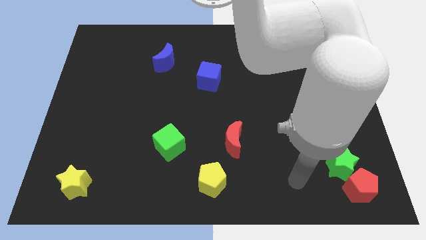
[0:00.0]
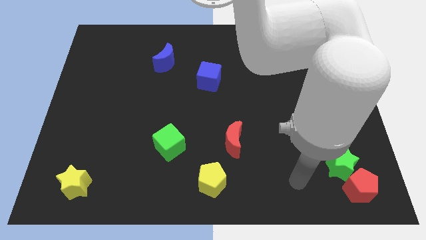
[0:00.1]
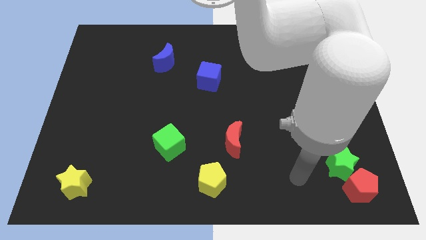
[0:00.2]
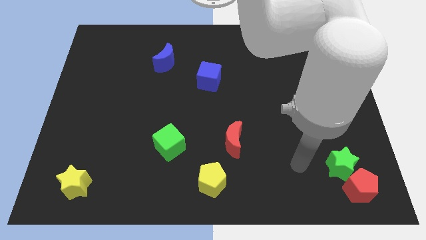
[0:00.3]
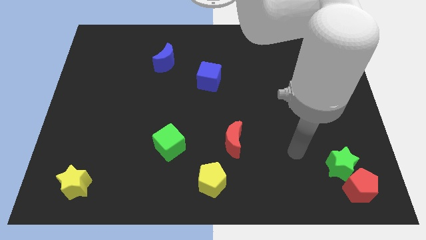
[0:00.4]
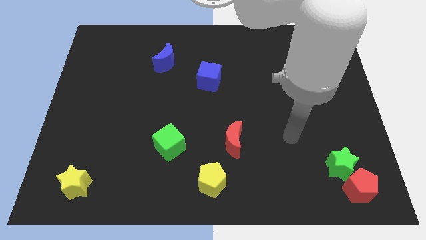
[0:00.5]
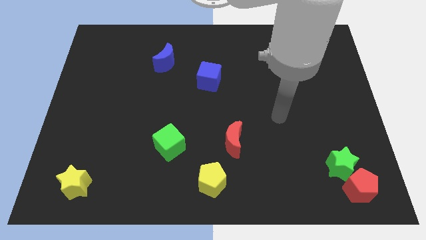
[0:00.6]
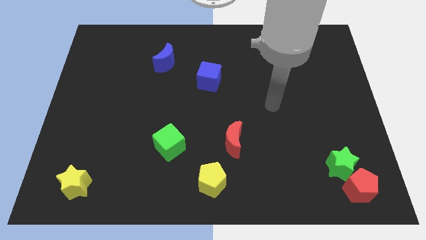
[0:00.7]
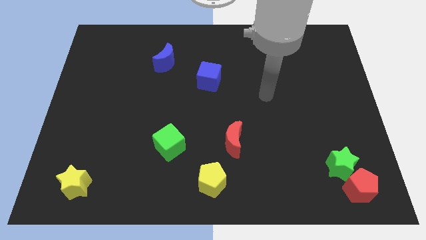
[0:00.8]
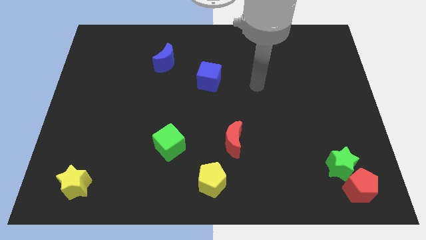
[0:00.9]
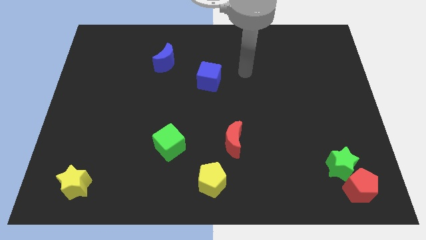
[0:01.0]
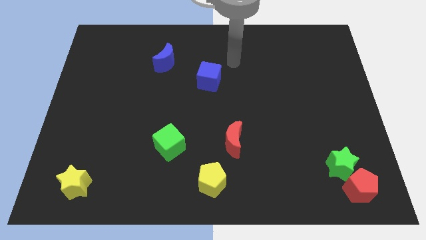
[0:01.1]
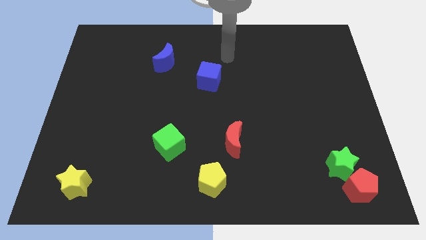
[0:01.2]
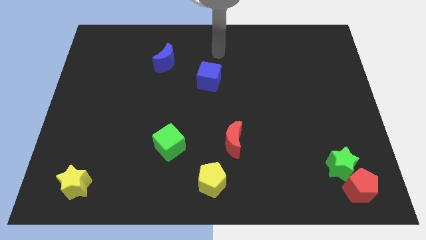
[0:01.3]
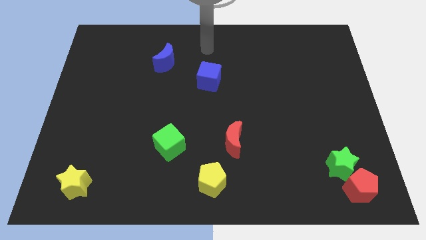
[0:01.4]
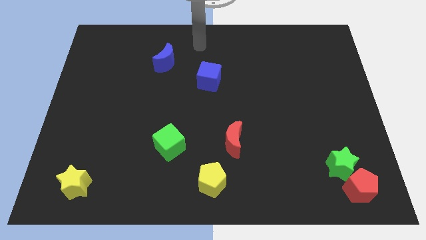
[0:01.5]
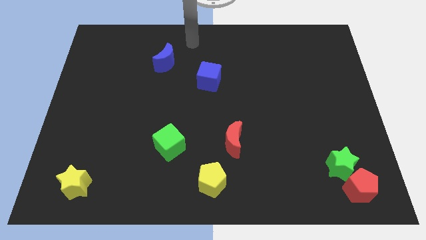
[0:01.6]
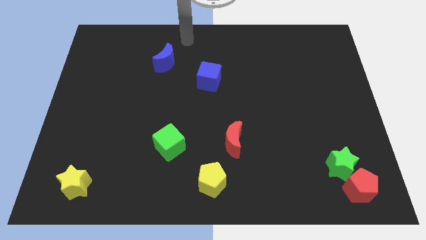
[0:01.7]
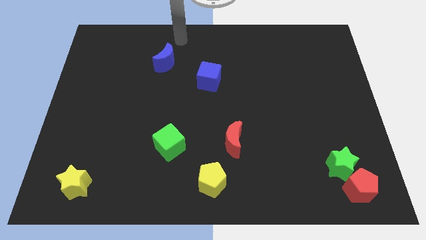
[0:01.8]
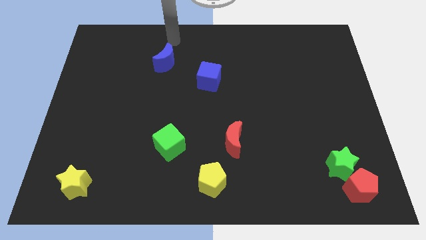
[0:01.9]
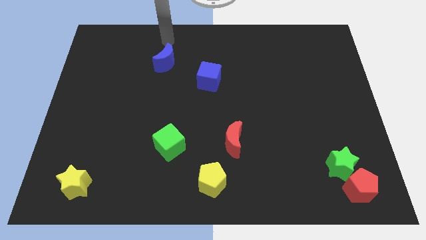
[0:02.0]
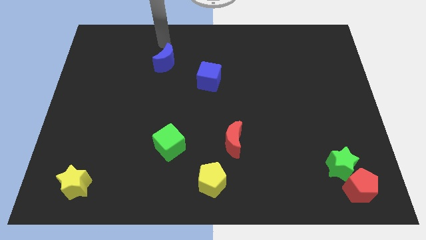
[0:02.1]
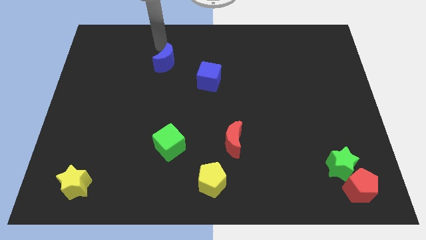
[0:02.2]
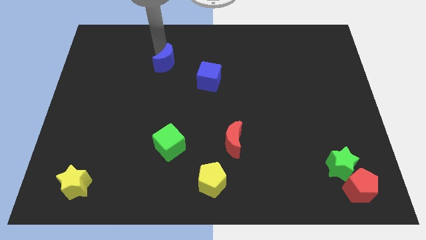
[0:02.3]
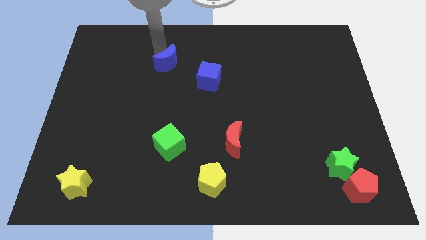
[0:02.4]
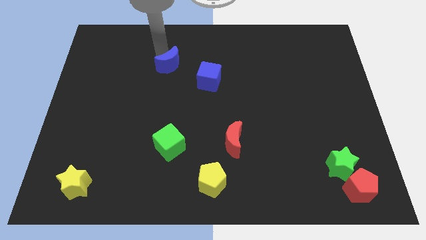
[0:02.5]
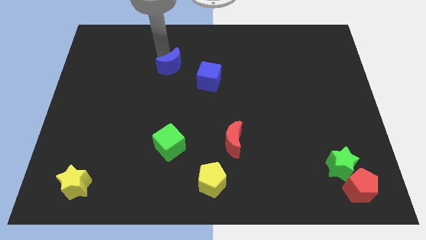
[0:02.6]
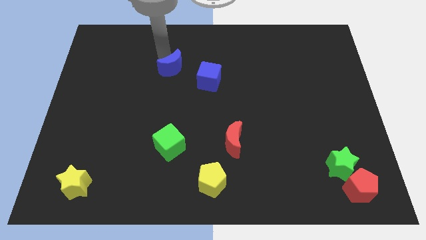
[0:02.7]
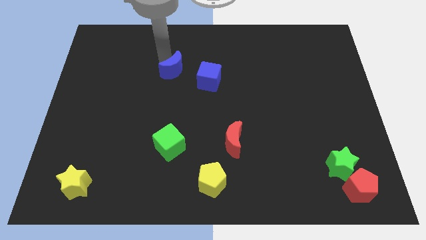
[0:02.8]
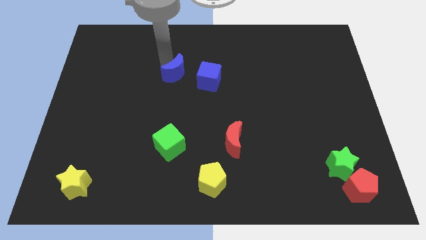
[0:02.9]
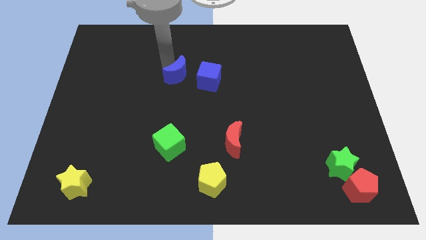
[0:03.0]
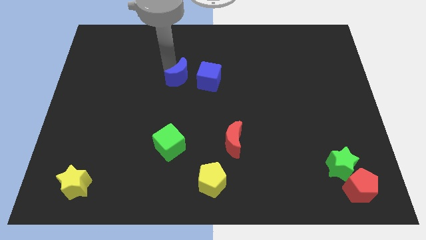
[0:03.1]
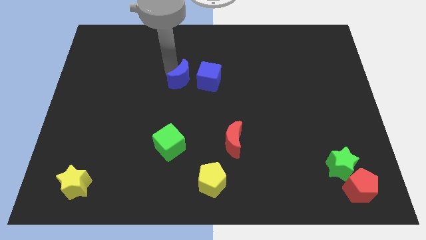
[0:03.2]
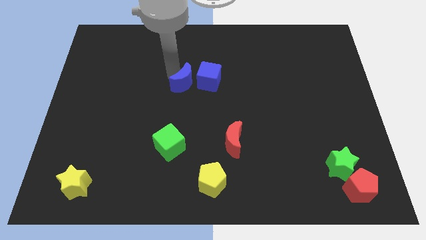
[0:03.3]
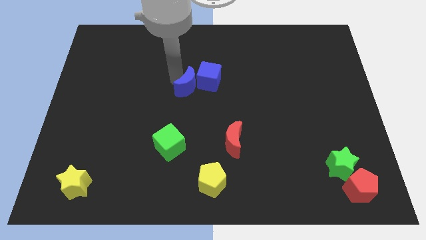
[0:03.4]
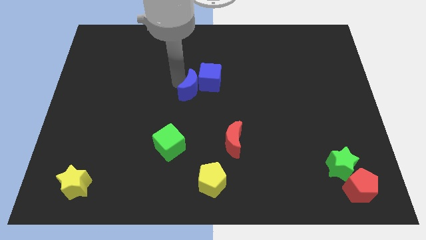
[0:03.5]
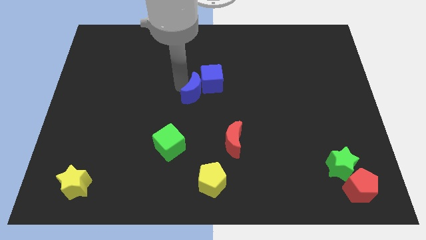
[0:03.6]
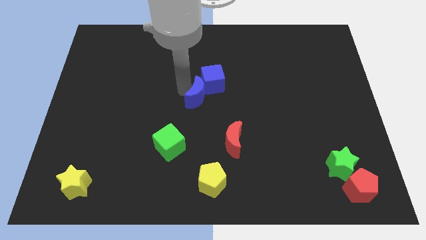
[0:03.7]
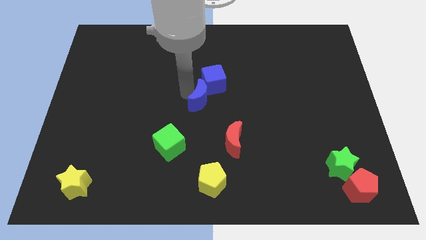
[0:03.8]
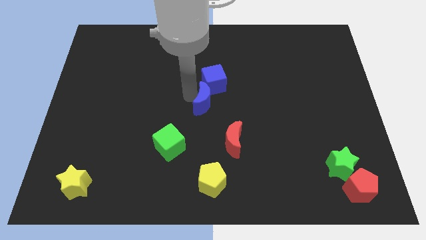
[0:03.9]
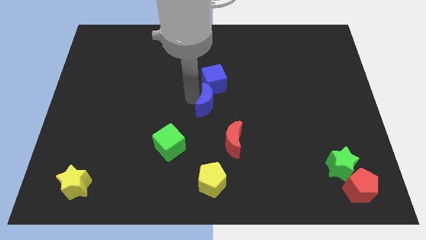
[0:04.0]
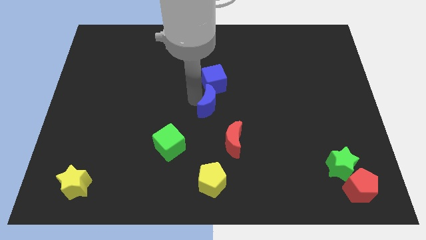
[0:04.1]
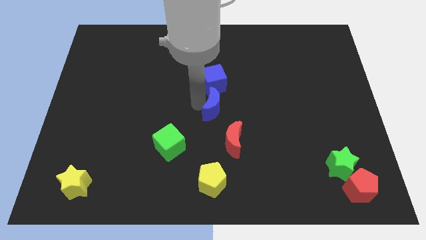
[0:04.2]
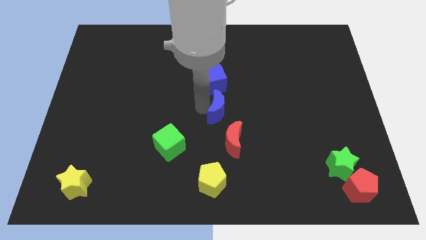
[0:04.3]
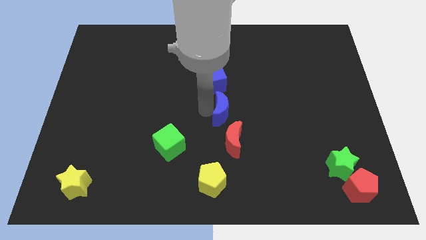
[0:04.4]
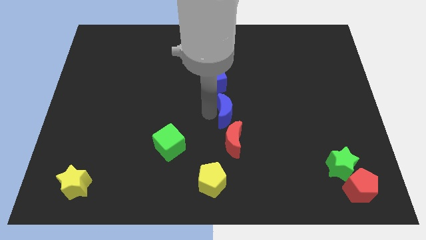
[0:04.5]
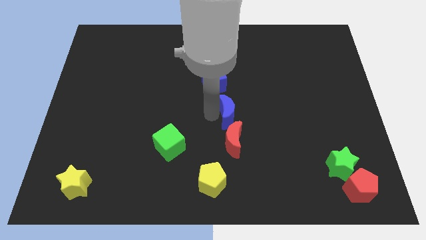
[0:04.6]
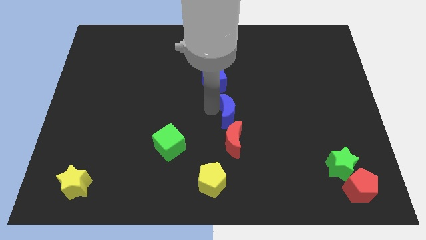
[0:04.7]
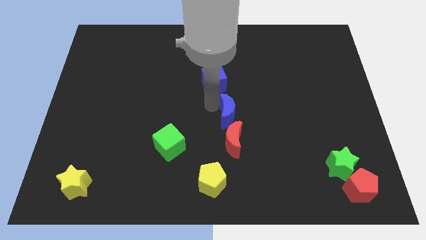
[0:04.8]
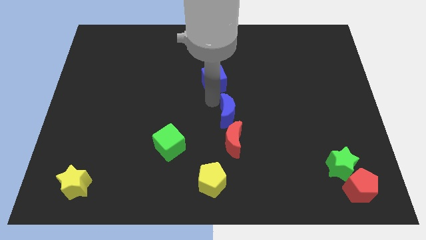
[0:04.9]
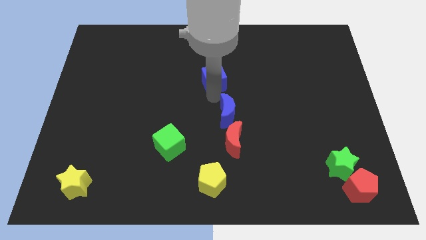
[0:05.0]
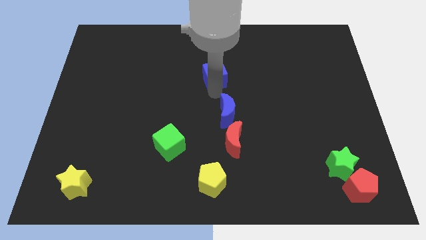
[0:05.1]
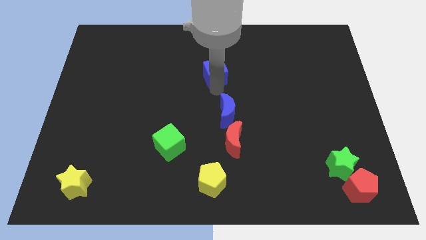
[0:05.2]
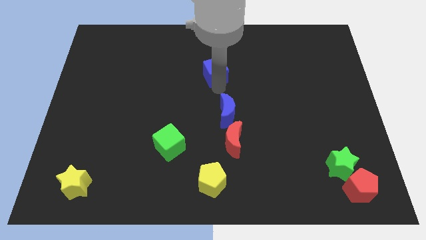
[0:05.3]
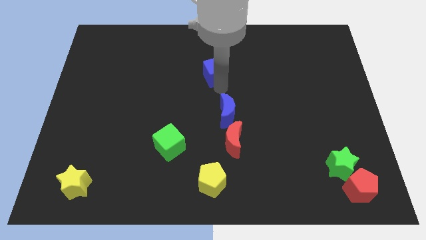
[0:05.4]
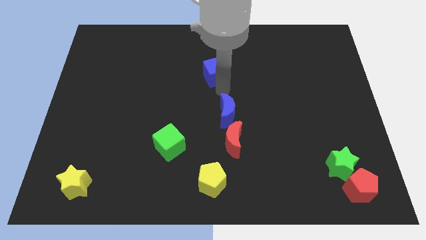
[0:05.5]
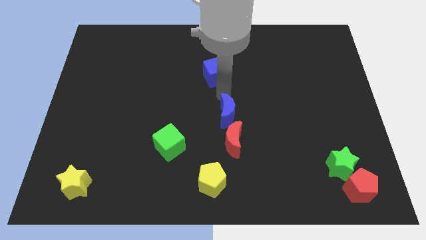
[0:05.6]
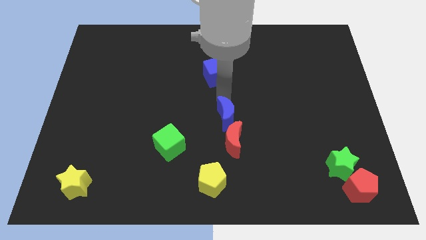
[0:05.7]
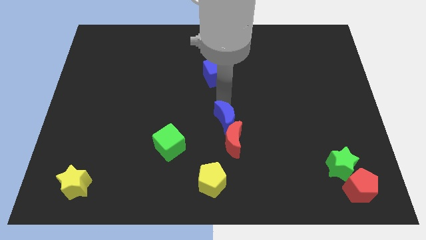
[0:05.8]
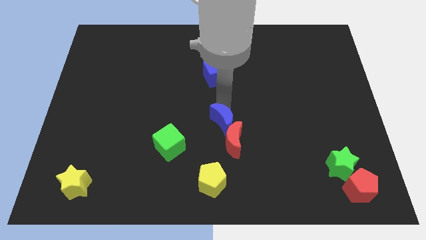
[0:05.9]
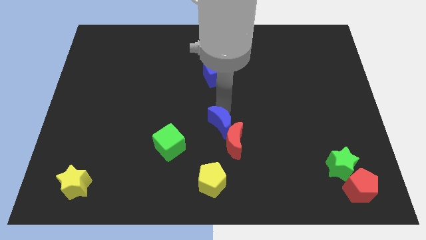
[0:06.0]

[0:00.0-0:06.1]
slide the blue moon next to the red moon

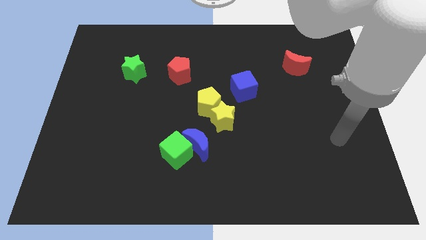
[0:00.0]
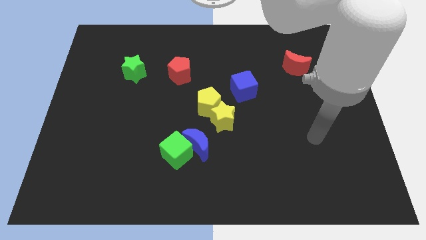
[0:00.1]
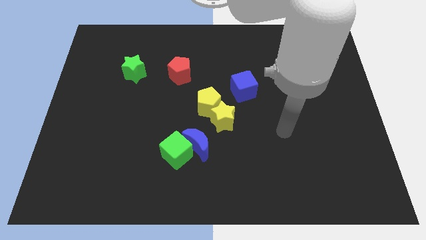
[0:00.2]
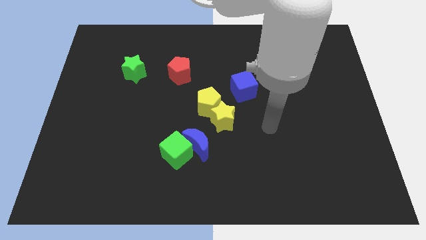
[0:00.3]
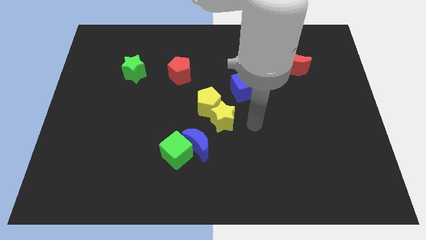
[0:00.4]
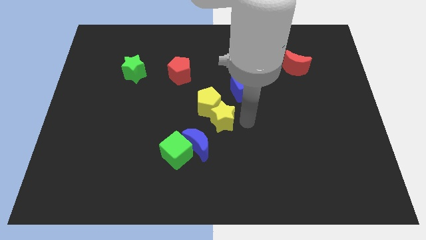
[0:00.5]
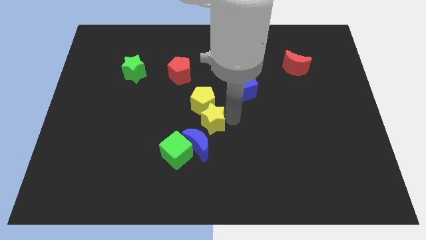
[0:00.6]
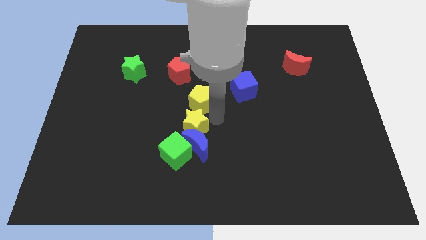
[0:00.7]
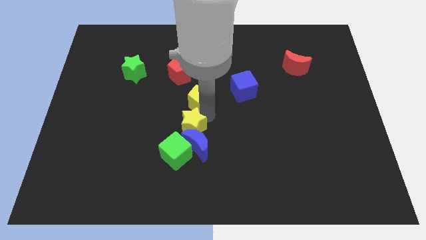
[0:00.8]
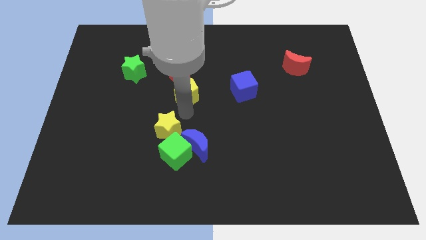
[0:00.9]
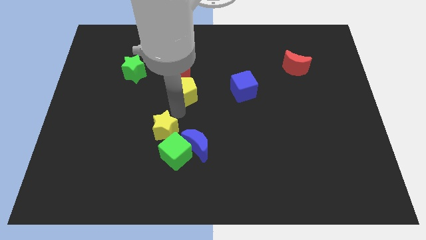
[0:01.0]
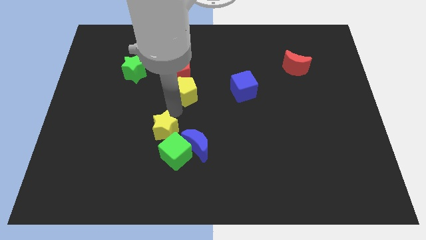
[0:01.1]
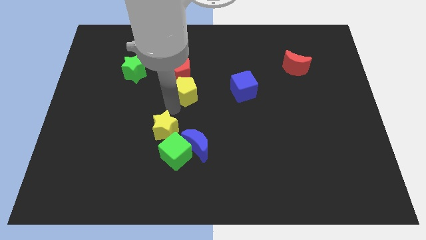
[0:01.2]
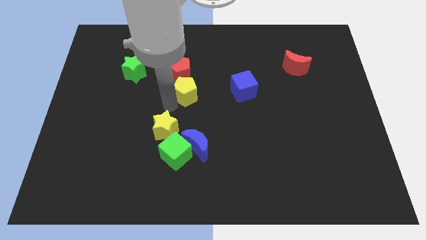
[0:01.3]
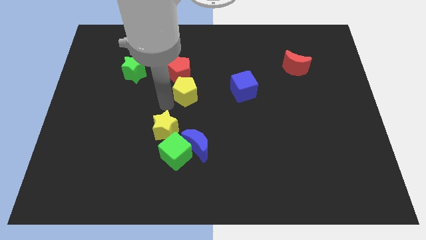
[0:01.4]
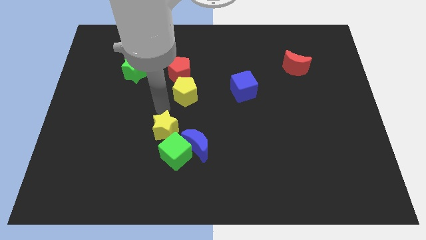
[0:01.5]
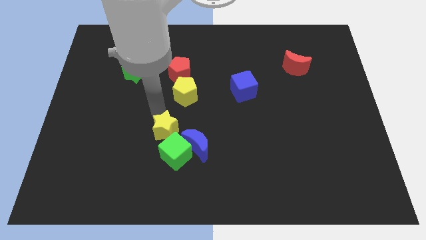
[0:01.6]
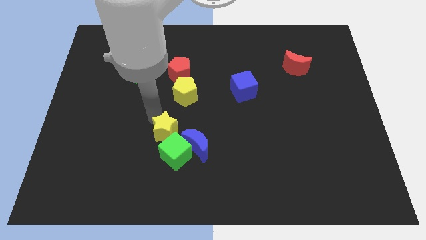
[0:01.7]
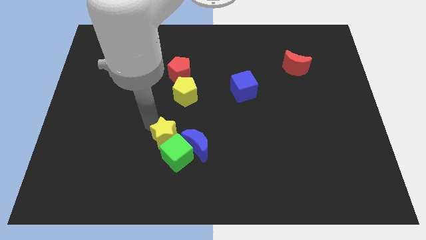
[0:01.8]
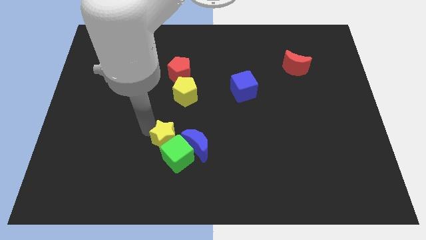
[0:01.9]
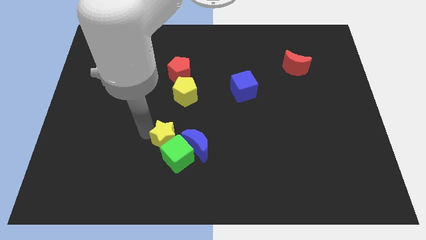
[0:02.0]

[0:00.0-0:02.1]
slide the yellow star towards the green cube

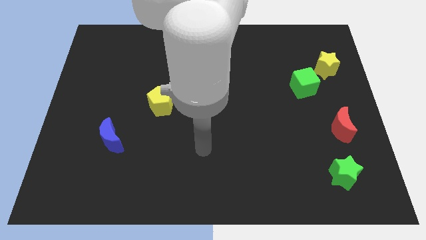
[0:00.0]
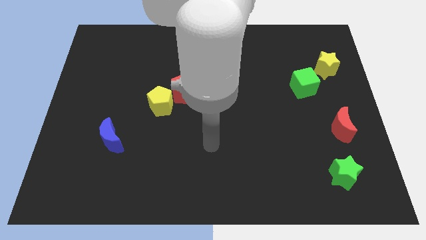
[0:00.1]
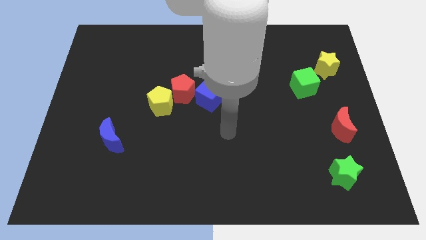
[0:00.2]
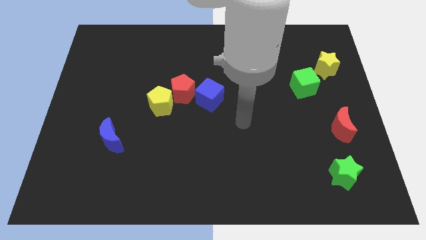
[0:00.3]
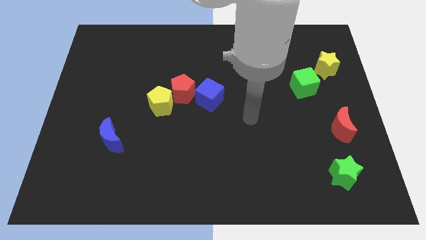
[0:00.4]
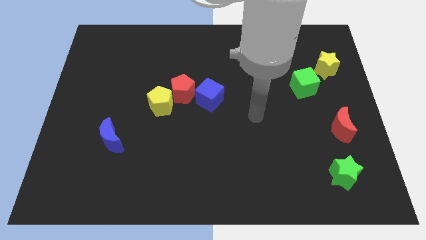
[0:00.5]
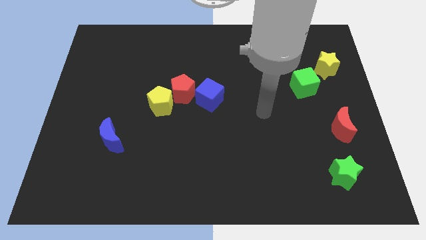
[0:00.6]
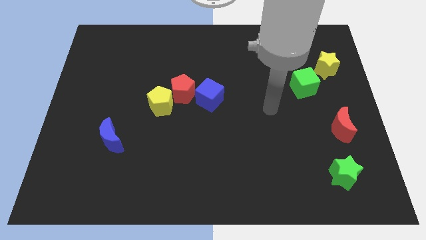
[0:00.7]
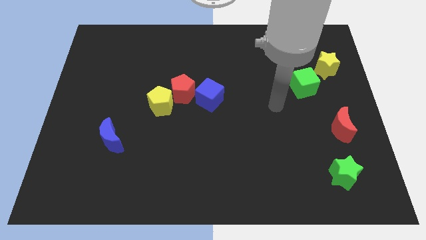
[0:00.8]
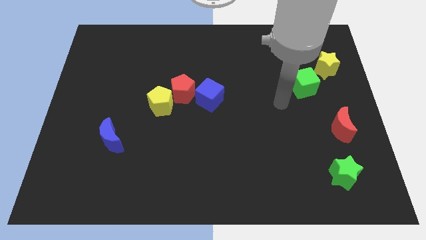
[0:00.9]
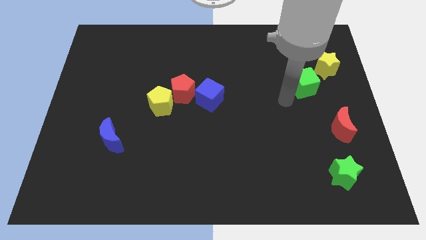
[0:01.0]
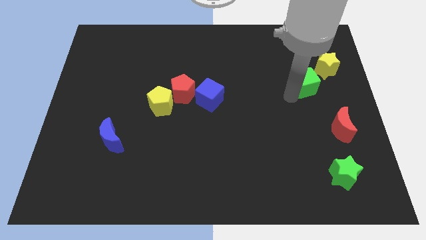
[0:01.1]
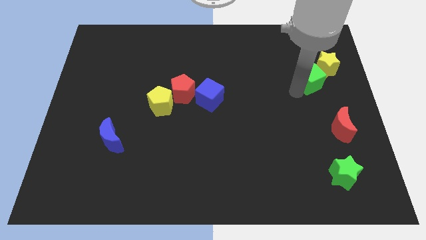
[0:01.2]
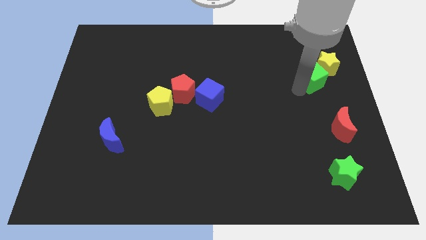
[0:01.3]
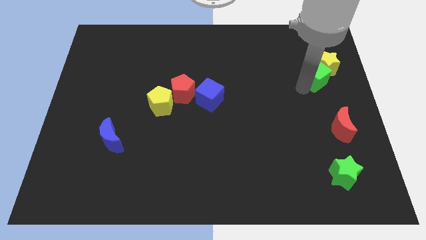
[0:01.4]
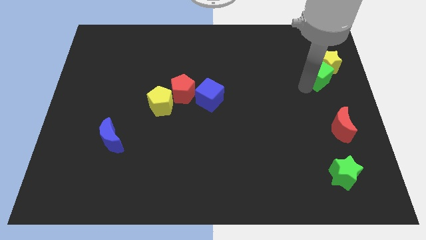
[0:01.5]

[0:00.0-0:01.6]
push the green cube next to the yellow star
